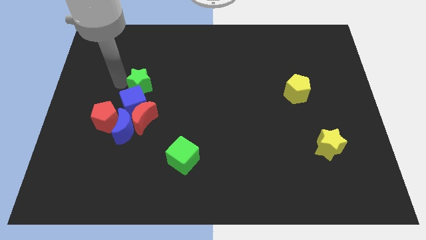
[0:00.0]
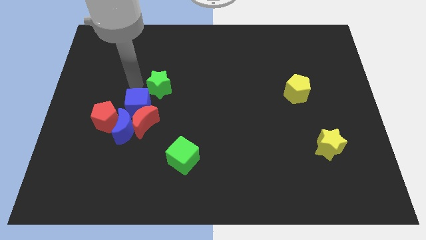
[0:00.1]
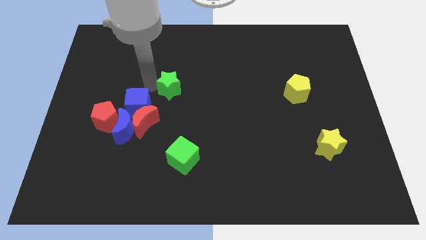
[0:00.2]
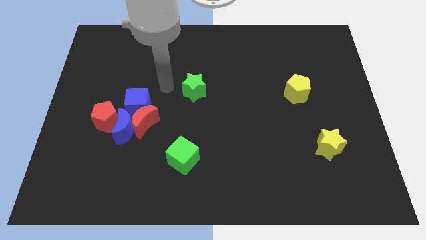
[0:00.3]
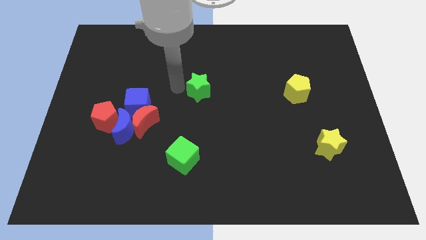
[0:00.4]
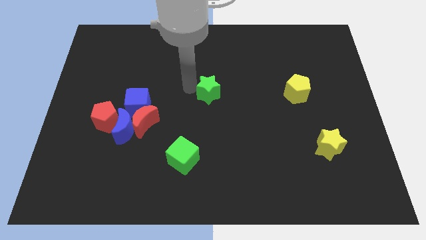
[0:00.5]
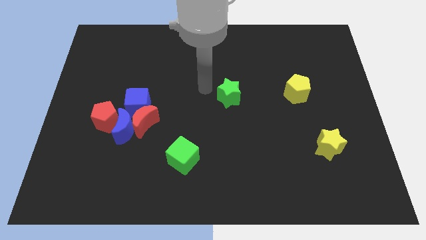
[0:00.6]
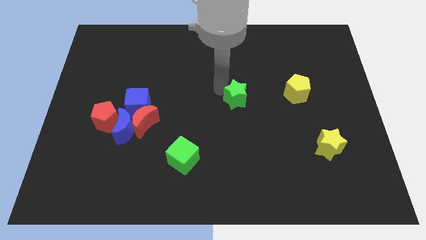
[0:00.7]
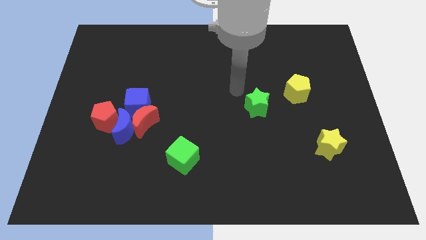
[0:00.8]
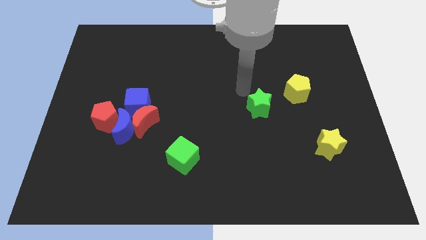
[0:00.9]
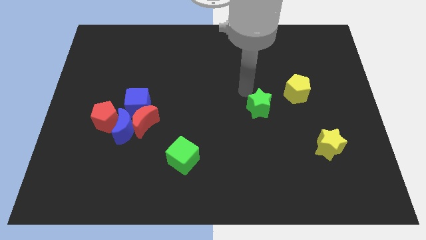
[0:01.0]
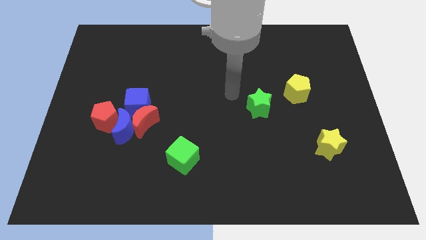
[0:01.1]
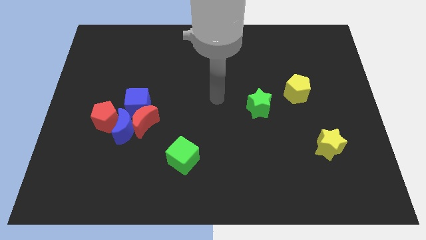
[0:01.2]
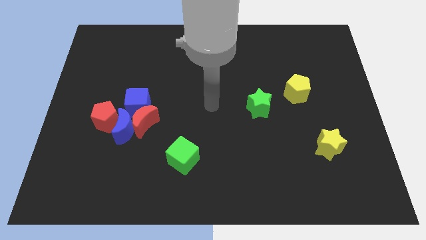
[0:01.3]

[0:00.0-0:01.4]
slide the green star diagonal bottom left yellow pentagon

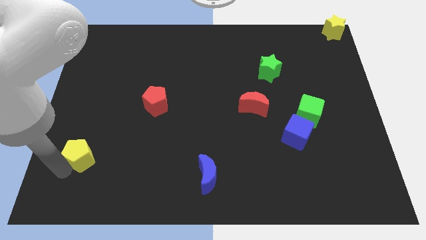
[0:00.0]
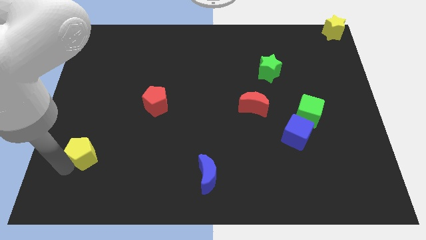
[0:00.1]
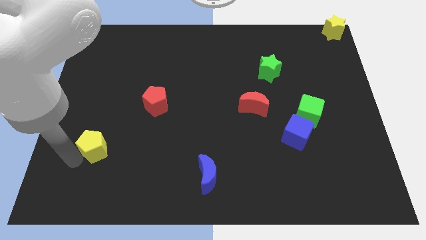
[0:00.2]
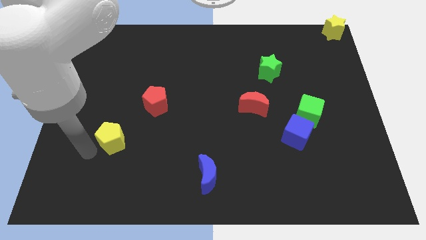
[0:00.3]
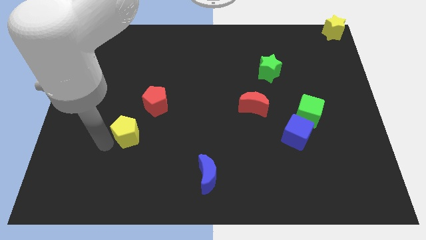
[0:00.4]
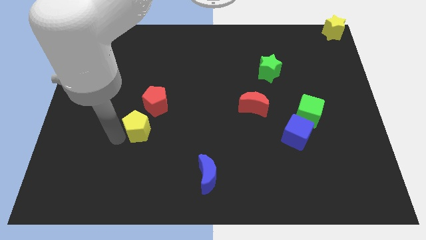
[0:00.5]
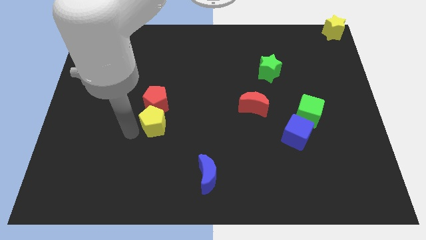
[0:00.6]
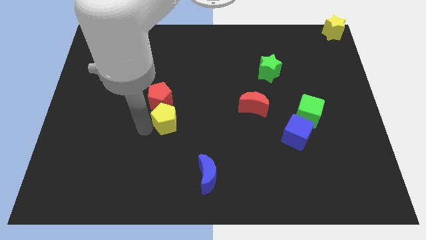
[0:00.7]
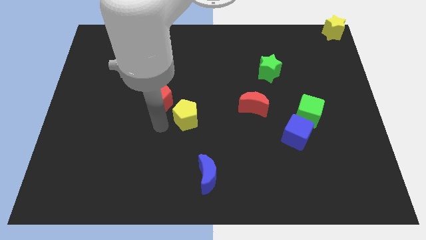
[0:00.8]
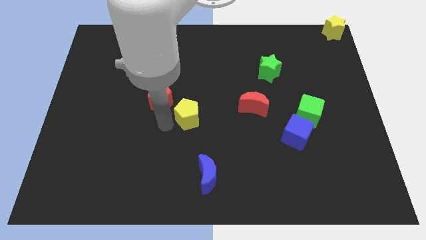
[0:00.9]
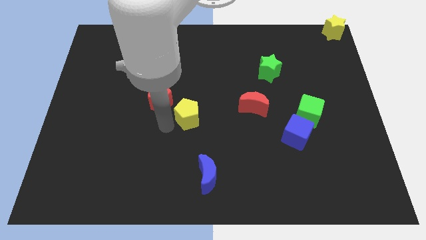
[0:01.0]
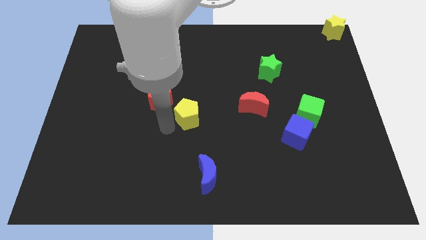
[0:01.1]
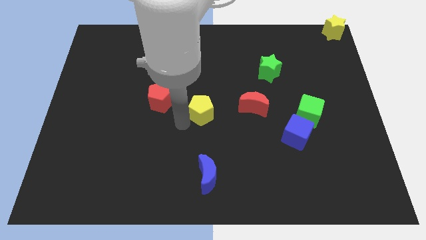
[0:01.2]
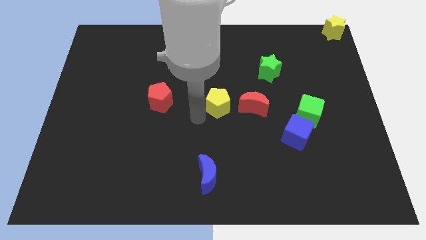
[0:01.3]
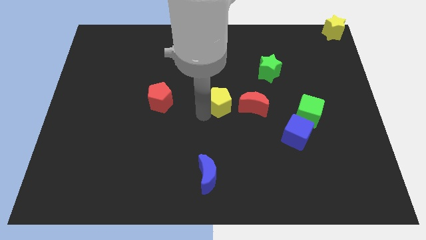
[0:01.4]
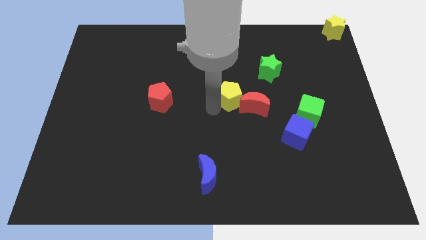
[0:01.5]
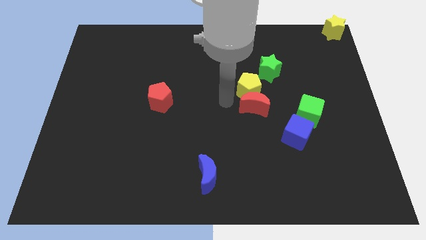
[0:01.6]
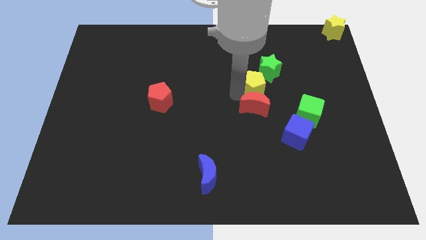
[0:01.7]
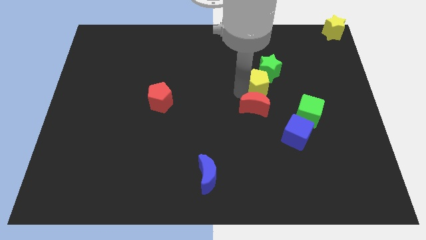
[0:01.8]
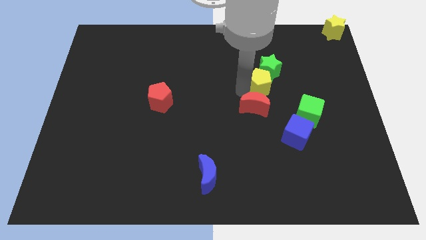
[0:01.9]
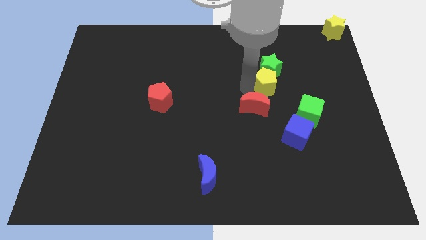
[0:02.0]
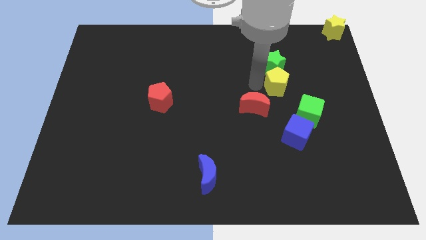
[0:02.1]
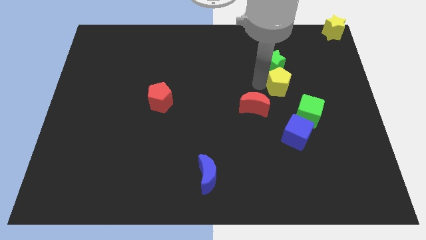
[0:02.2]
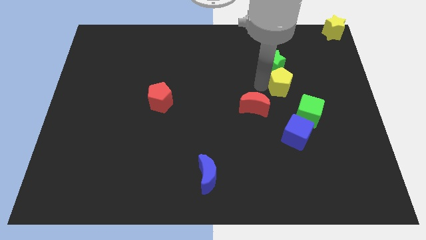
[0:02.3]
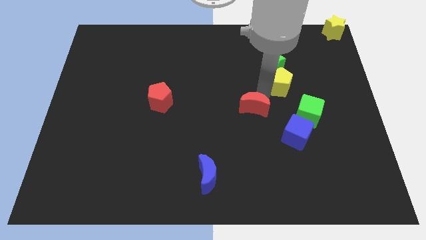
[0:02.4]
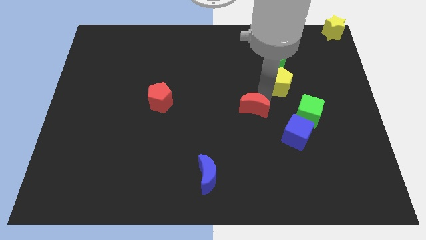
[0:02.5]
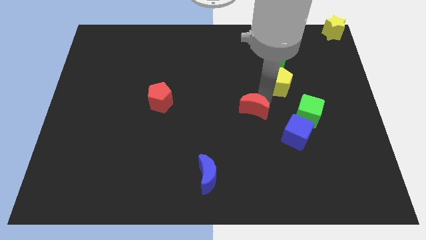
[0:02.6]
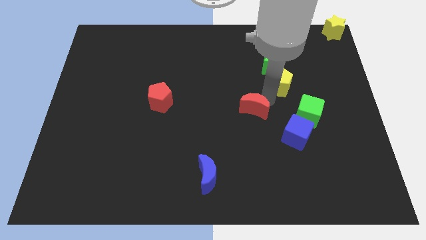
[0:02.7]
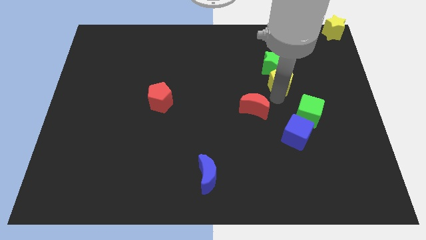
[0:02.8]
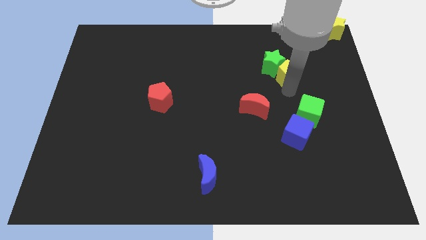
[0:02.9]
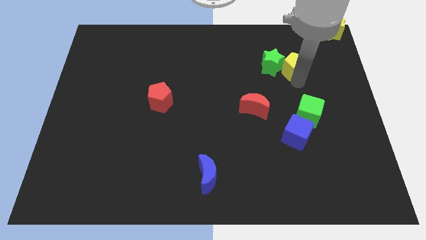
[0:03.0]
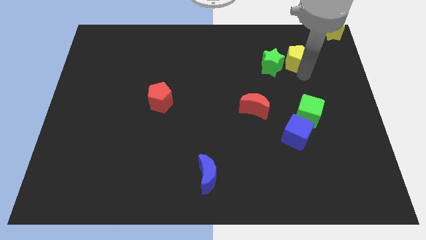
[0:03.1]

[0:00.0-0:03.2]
place yellow pentagon to the right of the green star

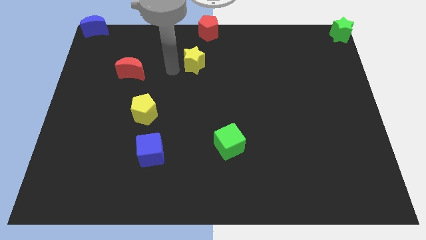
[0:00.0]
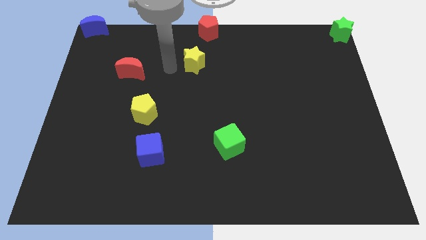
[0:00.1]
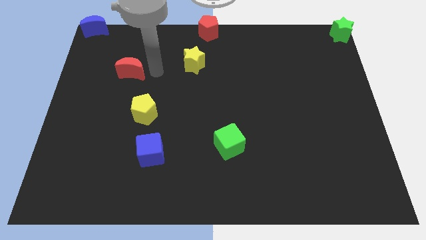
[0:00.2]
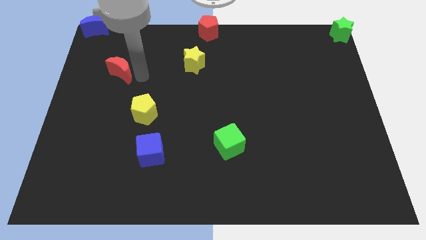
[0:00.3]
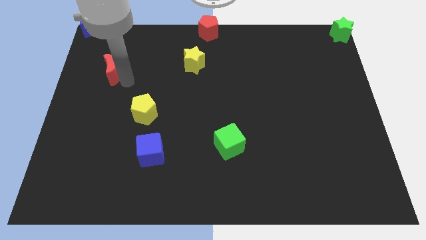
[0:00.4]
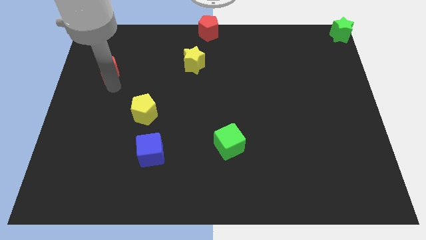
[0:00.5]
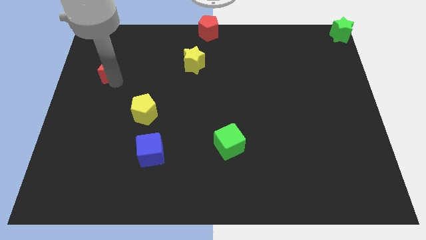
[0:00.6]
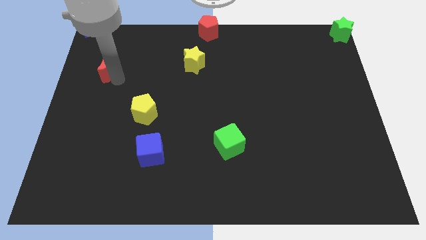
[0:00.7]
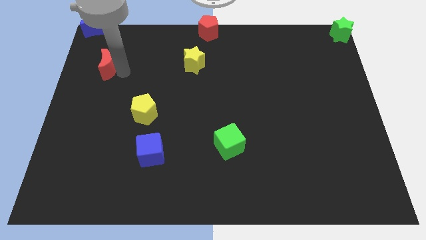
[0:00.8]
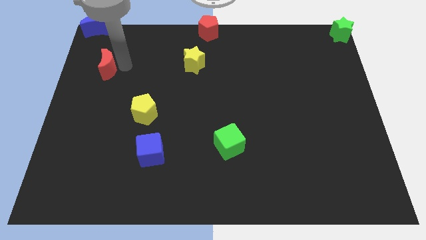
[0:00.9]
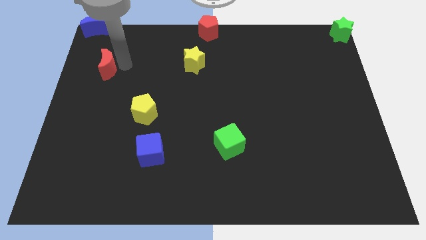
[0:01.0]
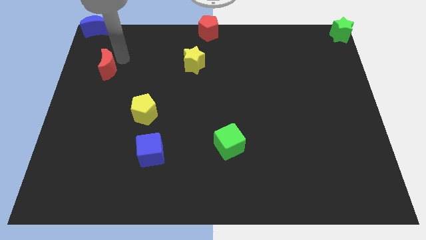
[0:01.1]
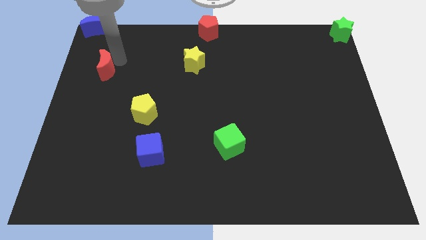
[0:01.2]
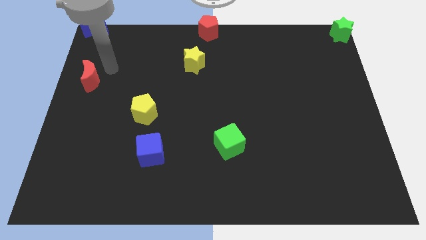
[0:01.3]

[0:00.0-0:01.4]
move the red crescent slightly left side to the board

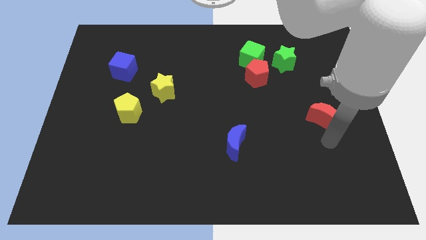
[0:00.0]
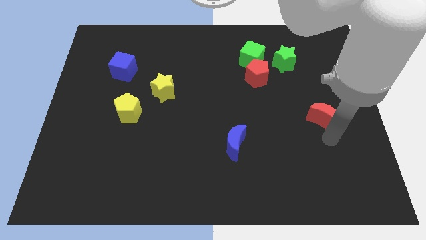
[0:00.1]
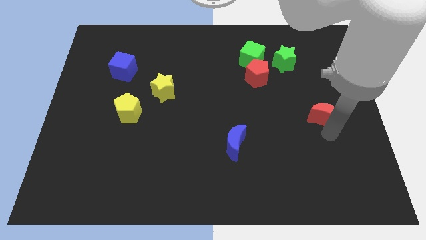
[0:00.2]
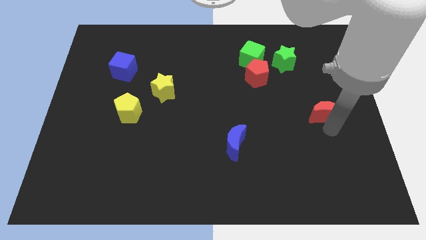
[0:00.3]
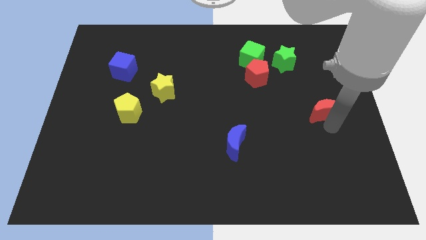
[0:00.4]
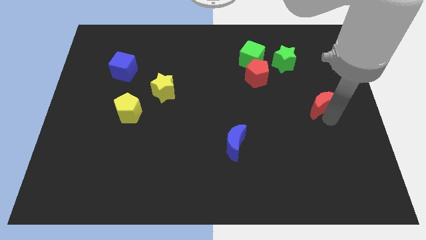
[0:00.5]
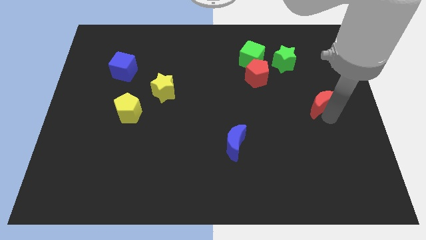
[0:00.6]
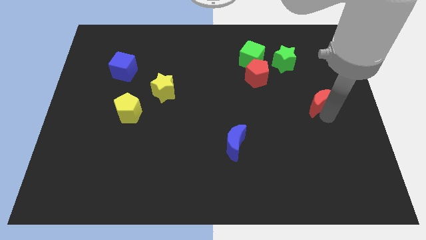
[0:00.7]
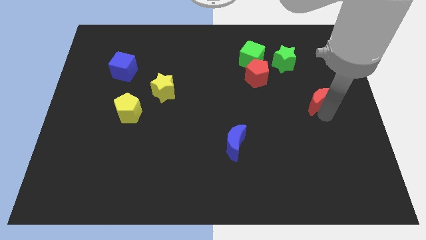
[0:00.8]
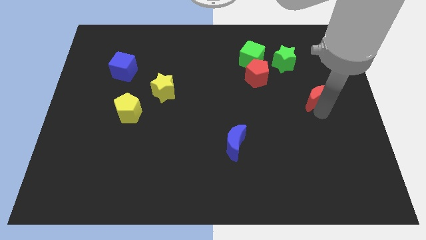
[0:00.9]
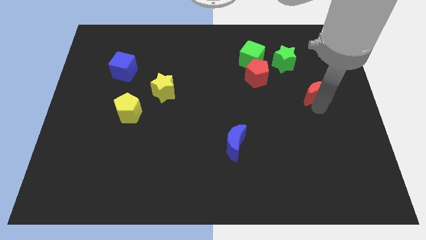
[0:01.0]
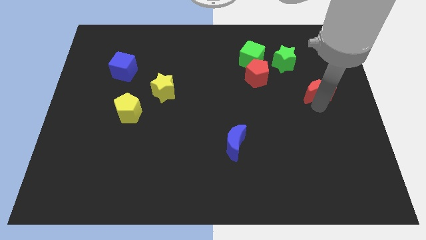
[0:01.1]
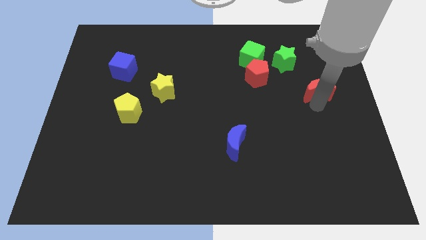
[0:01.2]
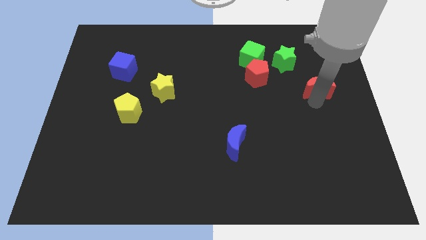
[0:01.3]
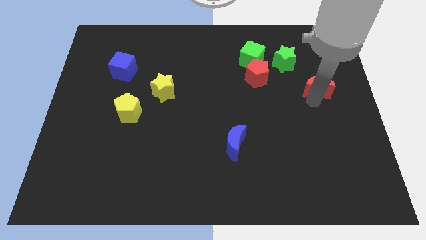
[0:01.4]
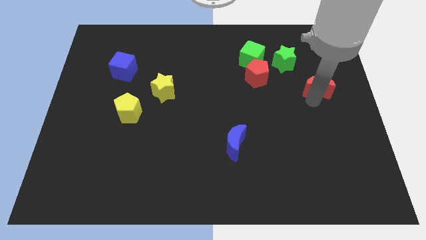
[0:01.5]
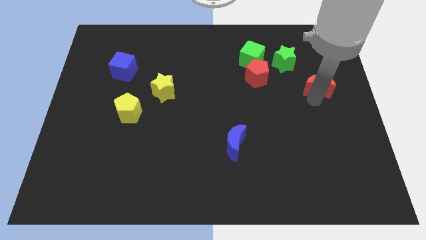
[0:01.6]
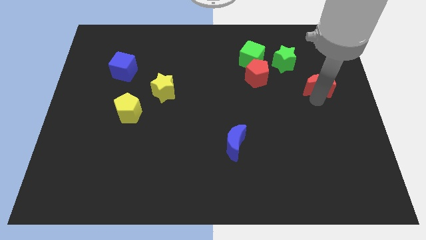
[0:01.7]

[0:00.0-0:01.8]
move the red moon towards the top side of the board

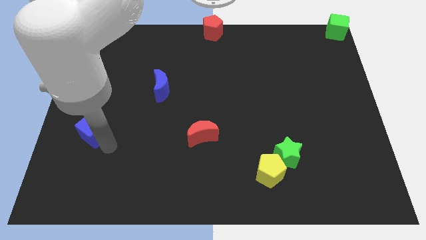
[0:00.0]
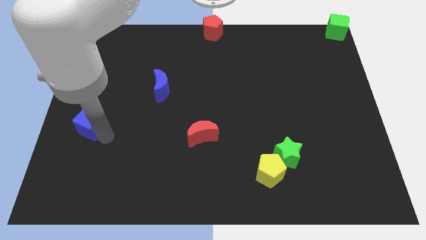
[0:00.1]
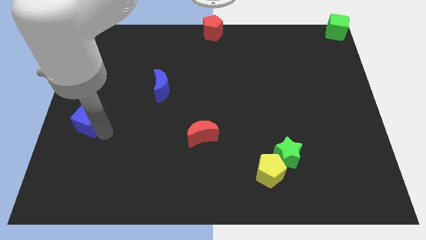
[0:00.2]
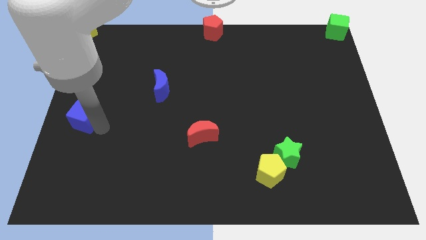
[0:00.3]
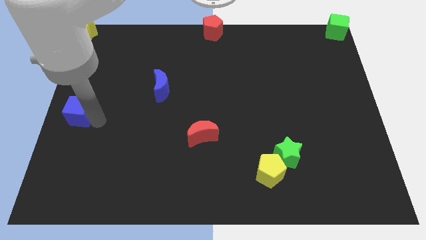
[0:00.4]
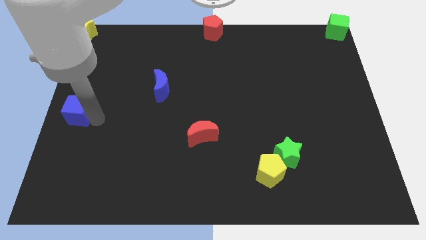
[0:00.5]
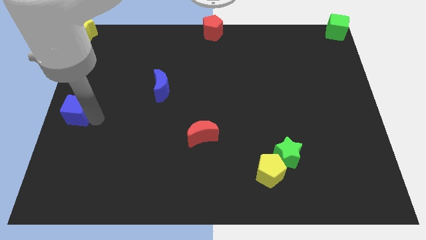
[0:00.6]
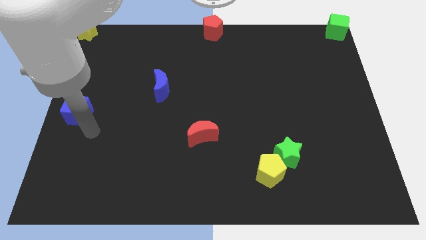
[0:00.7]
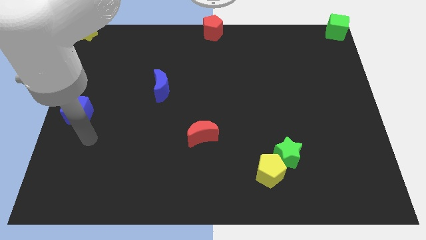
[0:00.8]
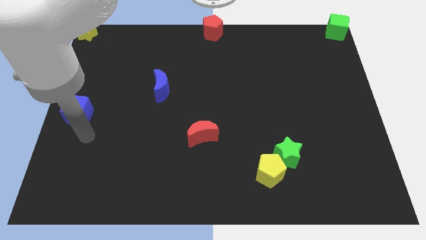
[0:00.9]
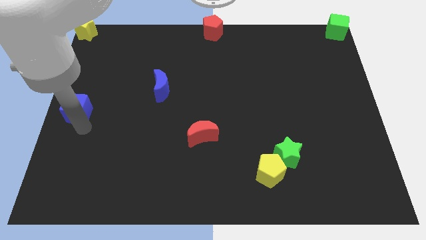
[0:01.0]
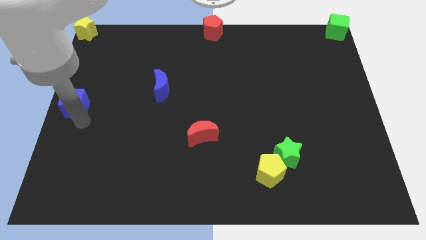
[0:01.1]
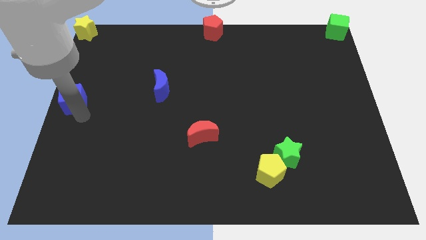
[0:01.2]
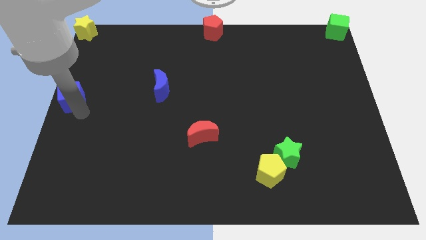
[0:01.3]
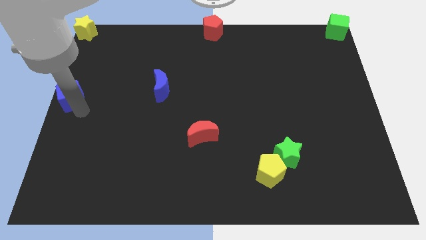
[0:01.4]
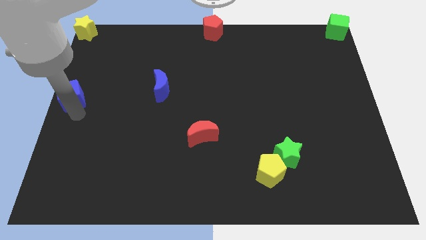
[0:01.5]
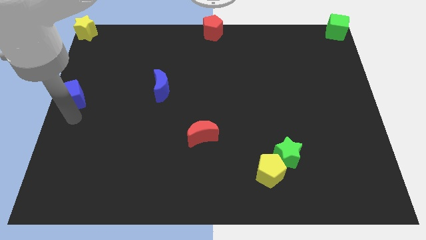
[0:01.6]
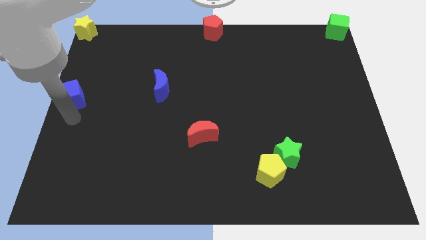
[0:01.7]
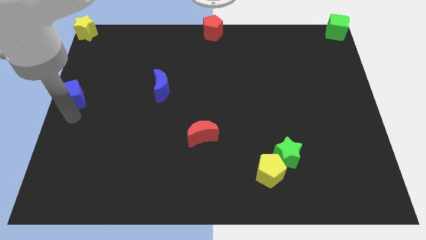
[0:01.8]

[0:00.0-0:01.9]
place the blue cube at the vertical bottom side of the yellow star
